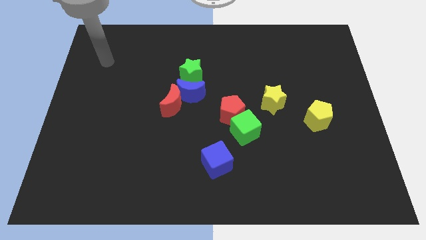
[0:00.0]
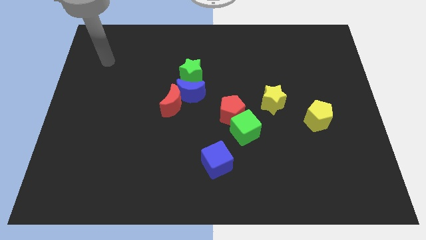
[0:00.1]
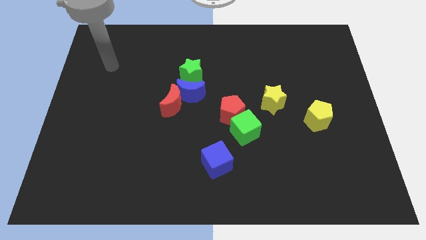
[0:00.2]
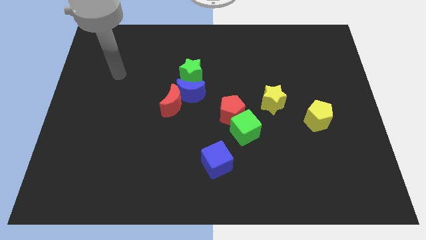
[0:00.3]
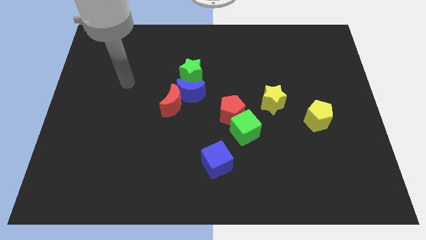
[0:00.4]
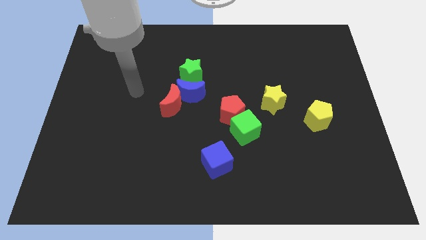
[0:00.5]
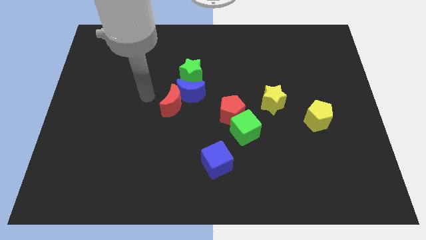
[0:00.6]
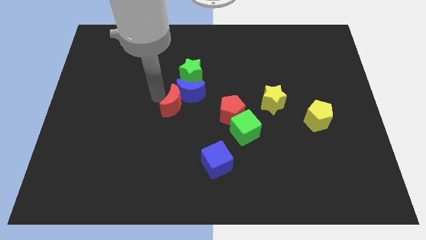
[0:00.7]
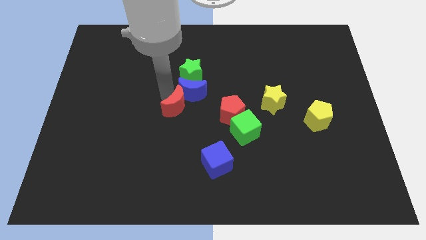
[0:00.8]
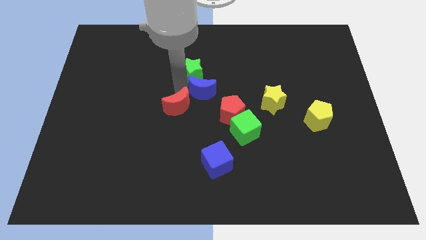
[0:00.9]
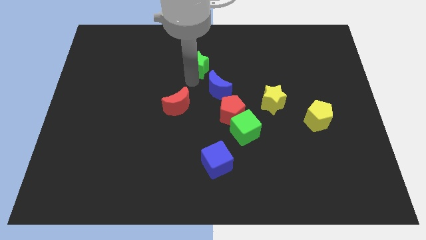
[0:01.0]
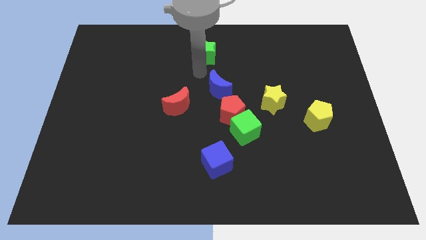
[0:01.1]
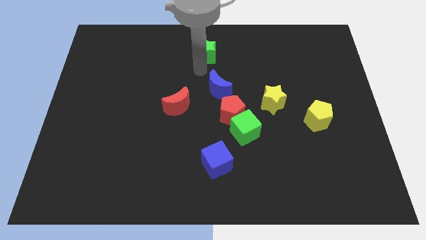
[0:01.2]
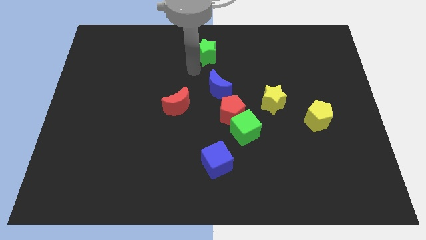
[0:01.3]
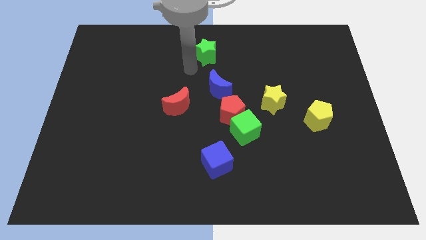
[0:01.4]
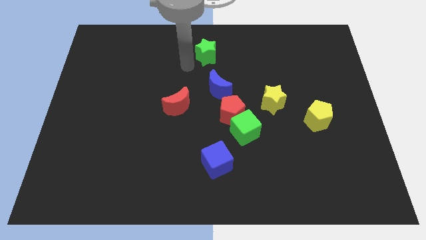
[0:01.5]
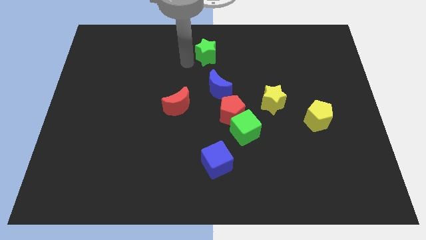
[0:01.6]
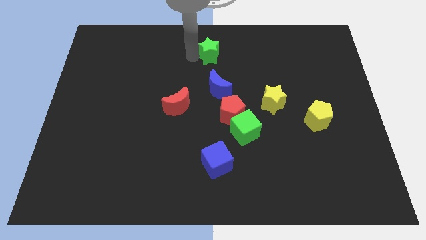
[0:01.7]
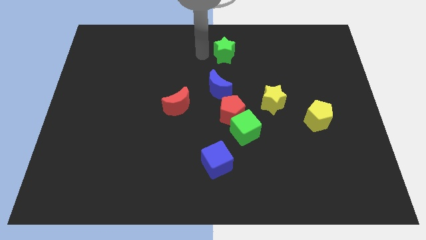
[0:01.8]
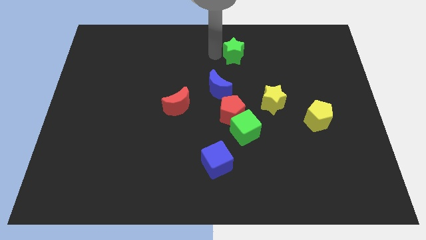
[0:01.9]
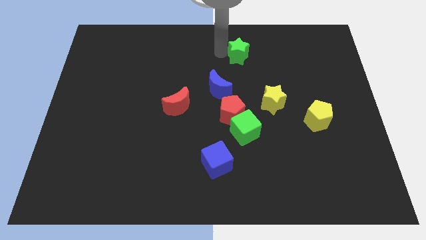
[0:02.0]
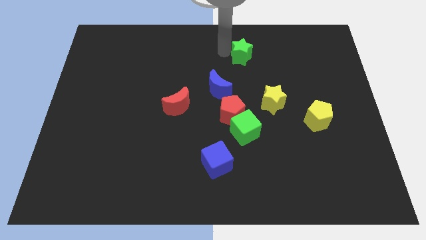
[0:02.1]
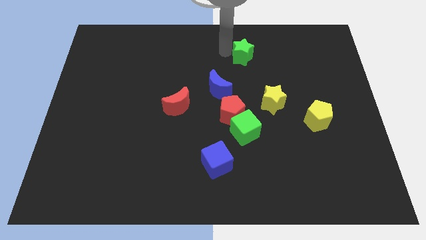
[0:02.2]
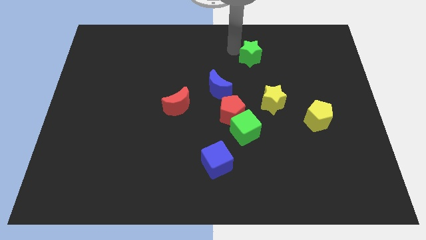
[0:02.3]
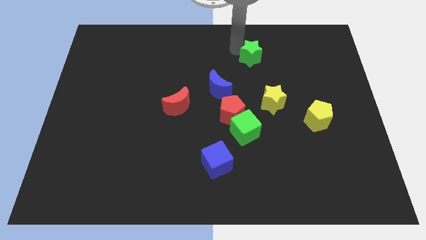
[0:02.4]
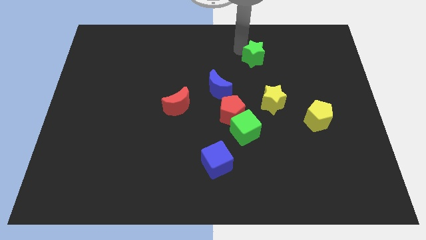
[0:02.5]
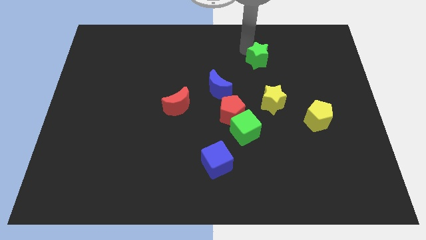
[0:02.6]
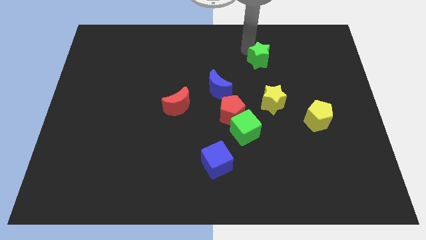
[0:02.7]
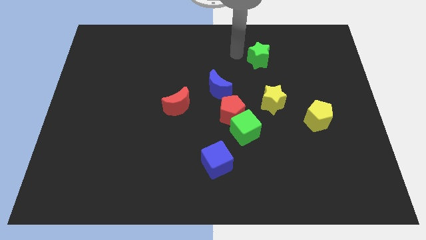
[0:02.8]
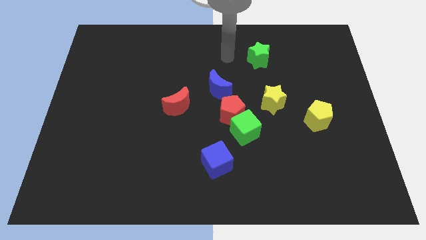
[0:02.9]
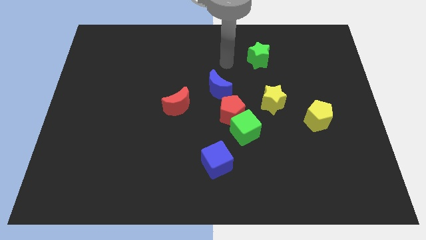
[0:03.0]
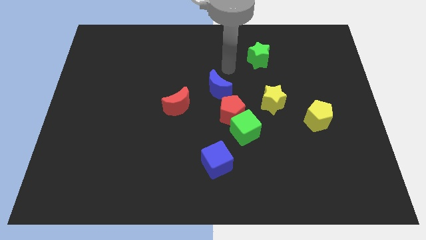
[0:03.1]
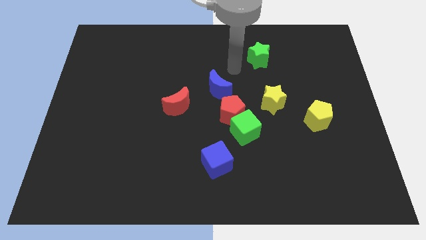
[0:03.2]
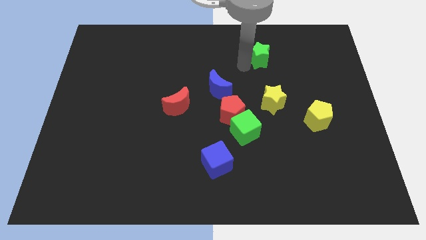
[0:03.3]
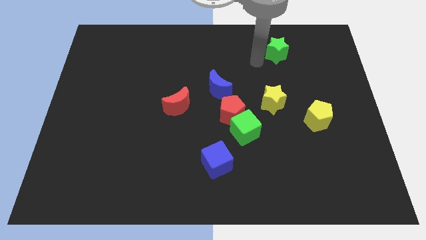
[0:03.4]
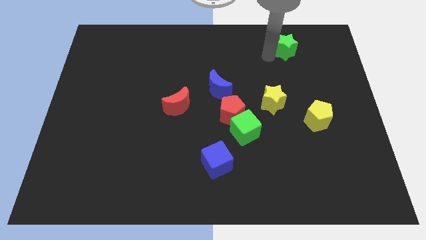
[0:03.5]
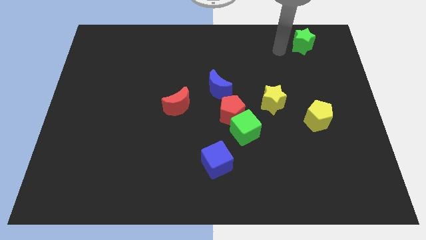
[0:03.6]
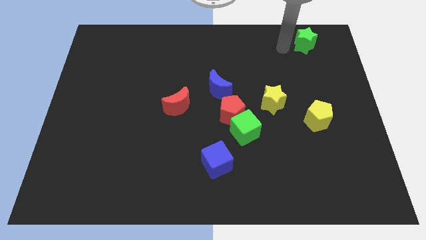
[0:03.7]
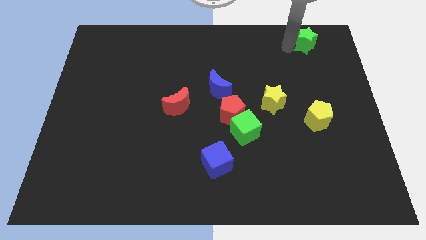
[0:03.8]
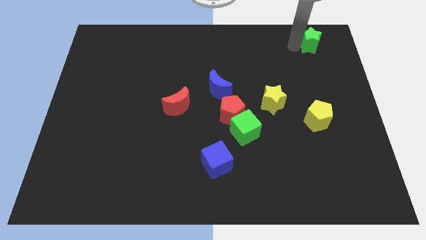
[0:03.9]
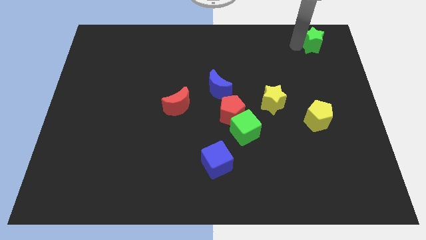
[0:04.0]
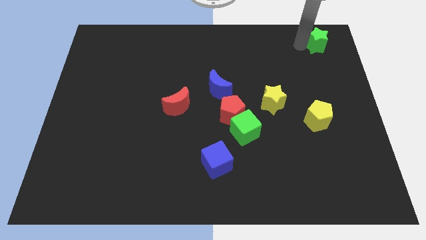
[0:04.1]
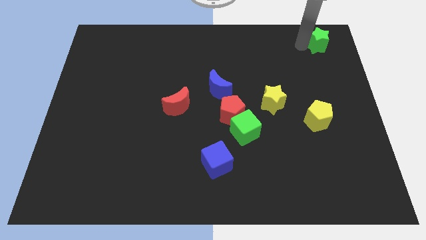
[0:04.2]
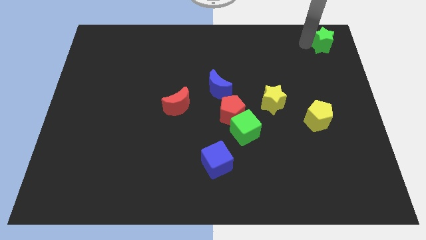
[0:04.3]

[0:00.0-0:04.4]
move the green star to the top right of the table

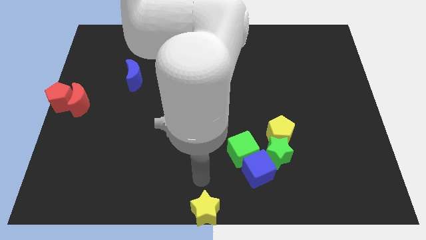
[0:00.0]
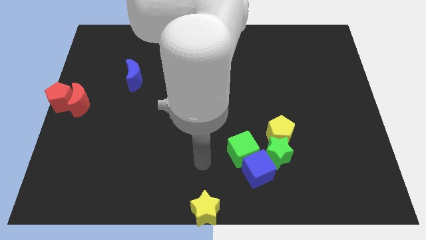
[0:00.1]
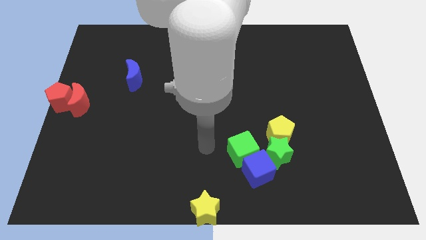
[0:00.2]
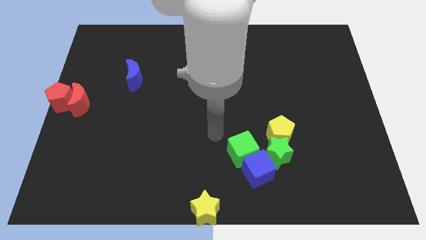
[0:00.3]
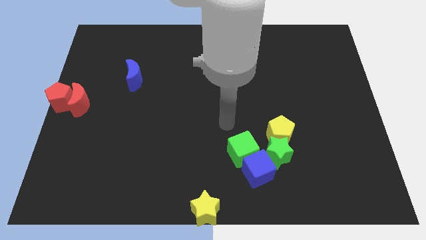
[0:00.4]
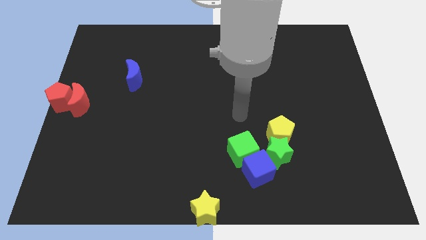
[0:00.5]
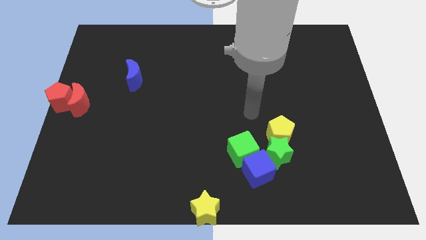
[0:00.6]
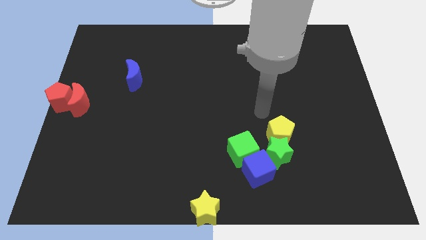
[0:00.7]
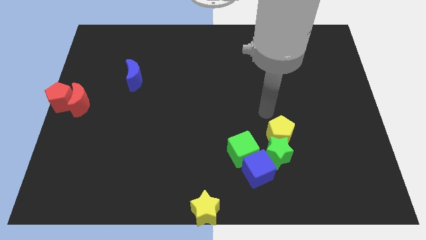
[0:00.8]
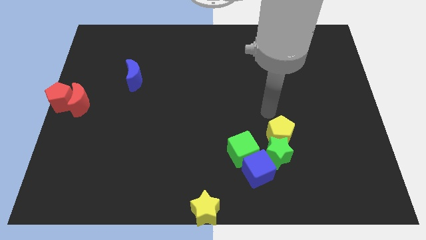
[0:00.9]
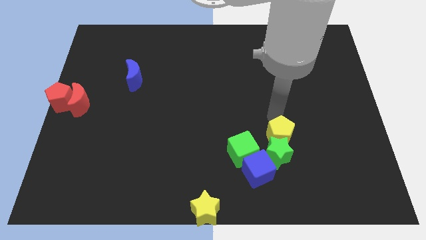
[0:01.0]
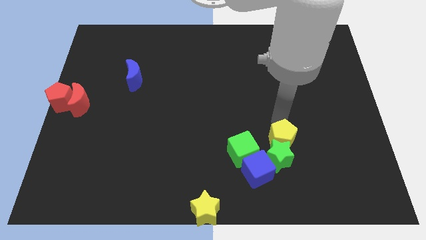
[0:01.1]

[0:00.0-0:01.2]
tap the yellow pentagon

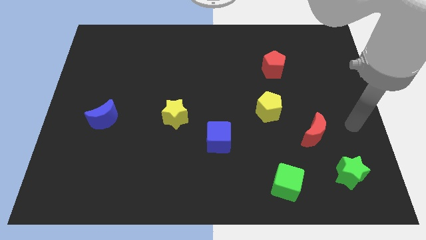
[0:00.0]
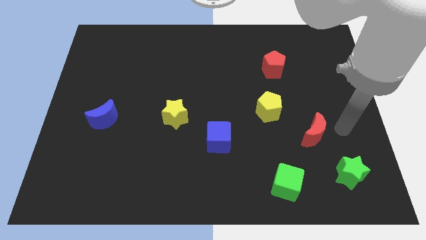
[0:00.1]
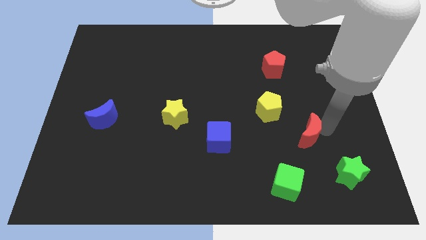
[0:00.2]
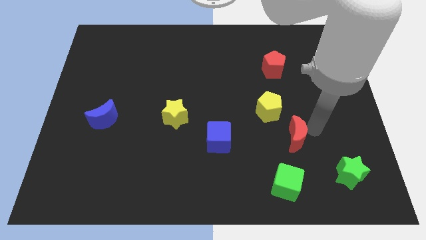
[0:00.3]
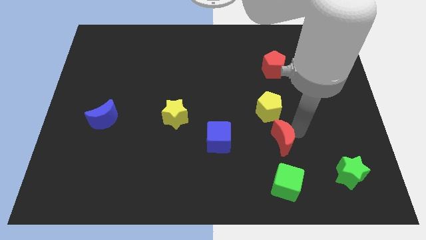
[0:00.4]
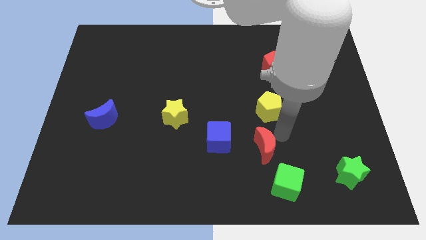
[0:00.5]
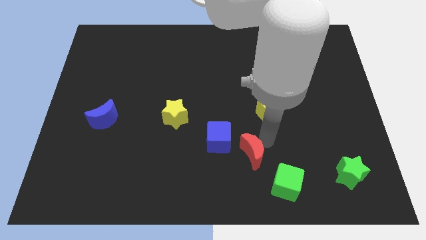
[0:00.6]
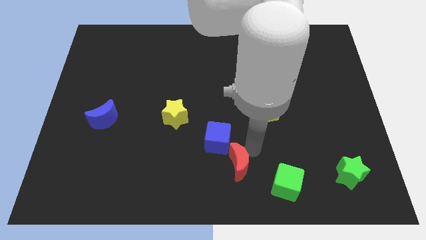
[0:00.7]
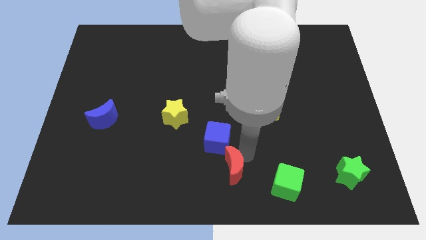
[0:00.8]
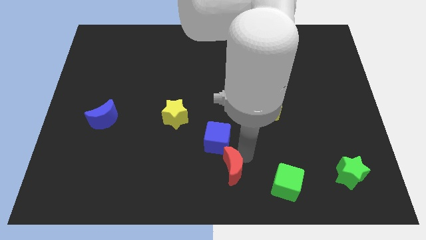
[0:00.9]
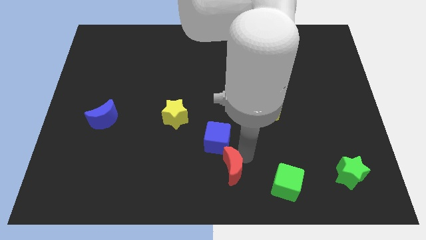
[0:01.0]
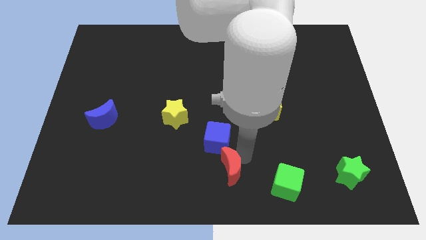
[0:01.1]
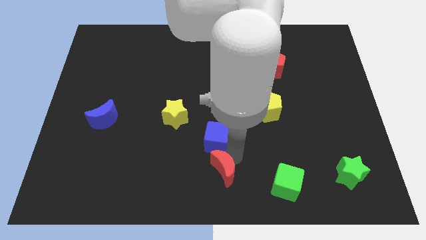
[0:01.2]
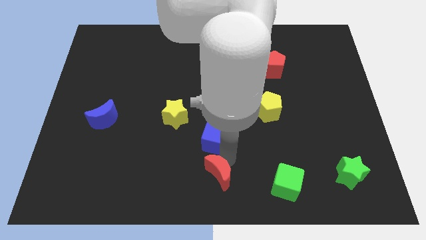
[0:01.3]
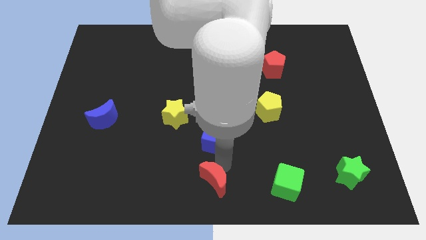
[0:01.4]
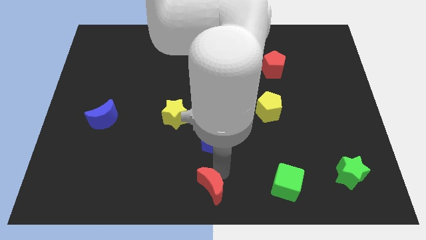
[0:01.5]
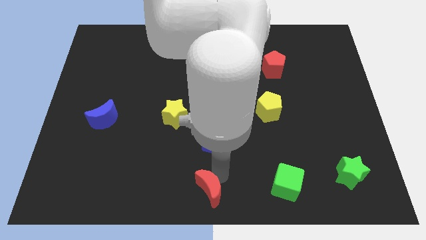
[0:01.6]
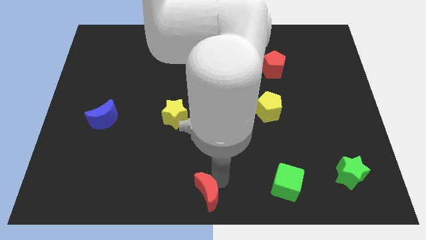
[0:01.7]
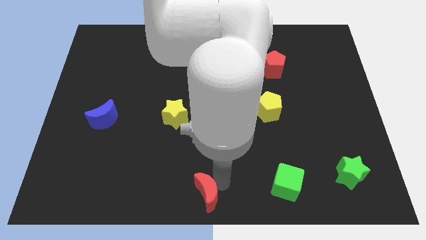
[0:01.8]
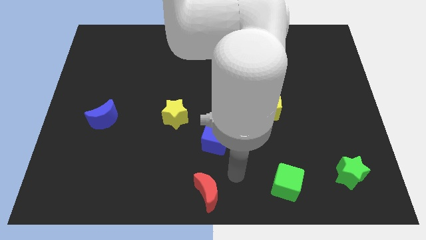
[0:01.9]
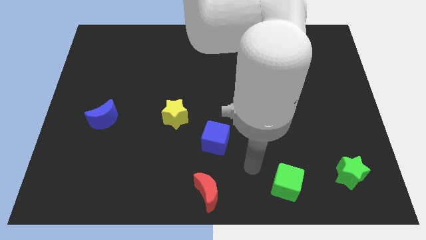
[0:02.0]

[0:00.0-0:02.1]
place the red crescent at the bottom center of the board

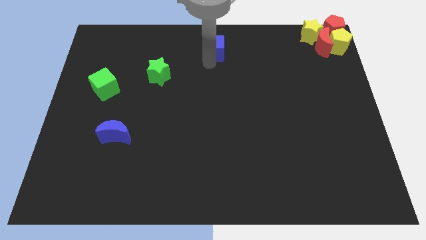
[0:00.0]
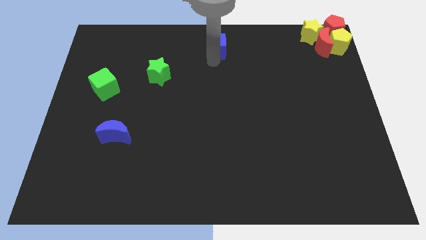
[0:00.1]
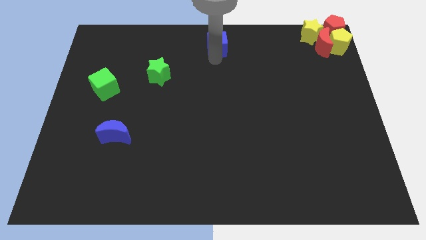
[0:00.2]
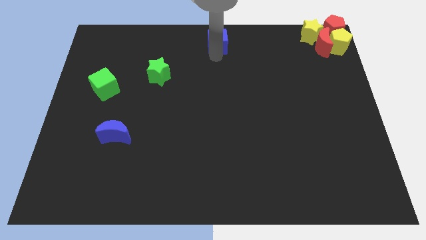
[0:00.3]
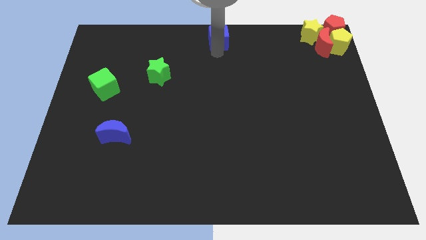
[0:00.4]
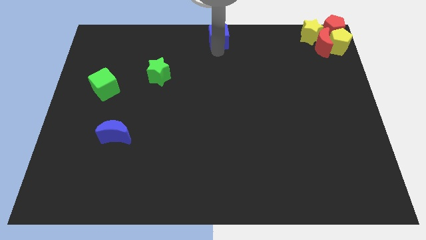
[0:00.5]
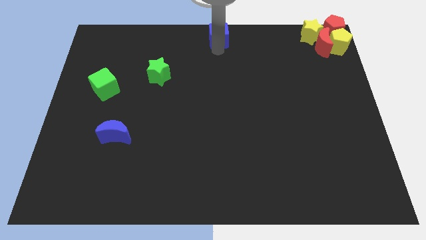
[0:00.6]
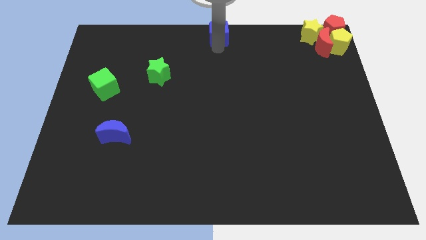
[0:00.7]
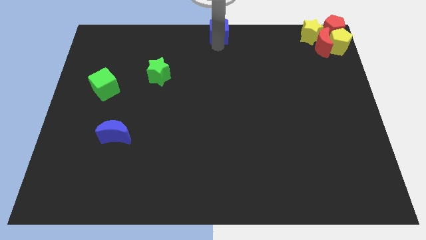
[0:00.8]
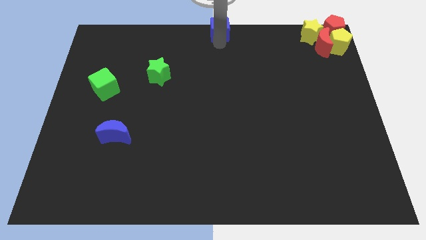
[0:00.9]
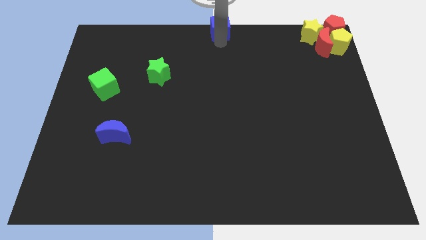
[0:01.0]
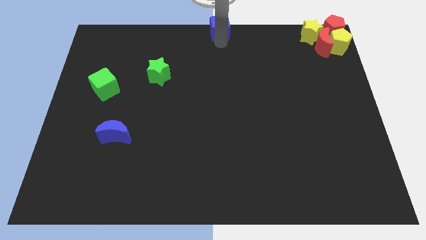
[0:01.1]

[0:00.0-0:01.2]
move the blue cube to the top center of the board
